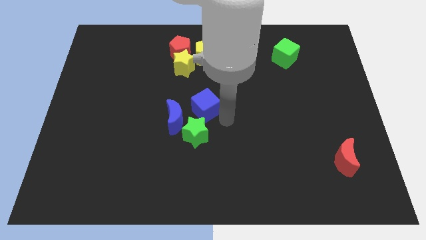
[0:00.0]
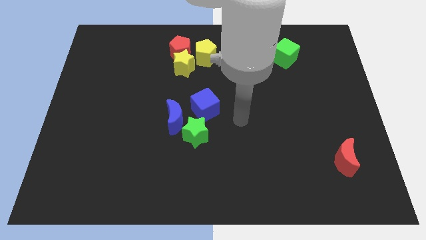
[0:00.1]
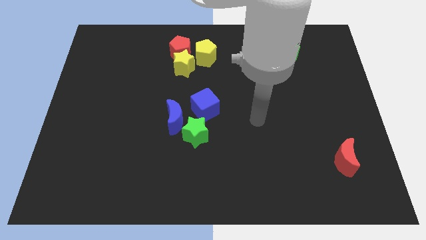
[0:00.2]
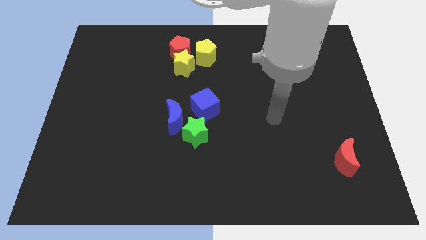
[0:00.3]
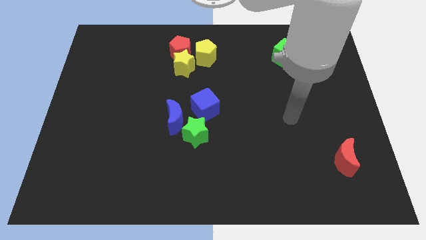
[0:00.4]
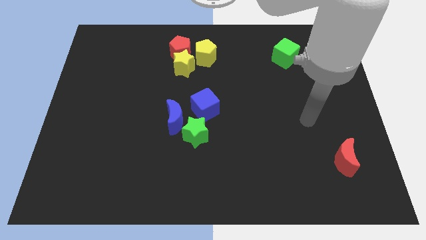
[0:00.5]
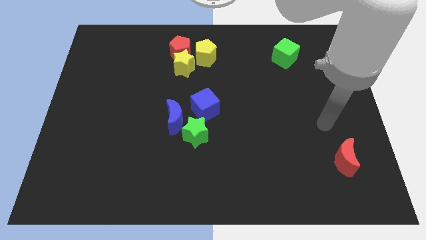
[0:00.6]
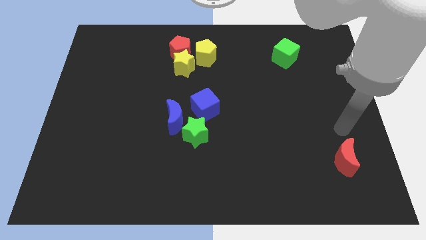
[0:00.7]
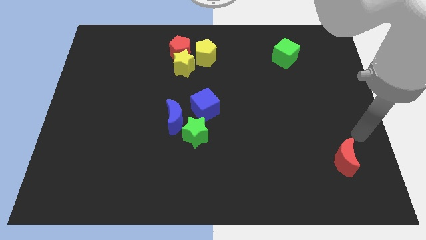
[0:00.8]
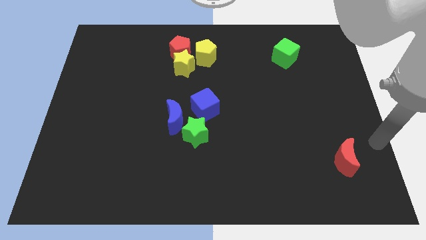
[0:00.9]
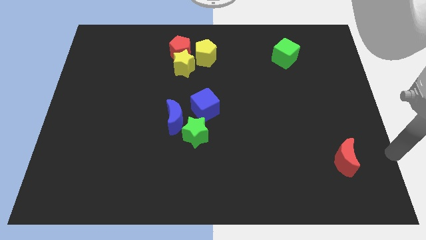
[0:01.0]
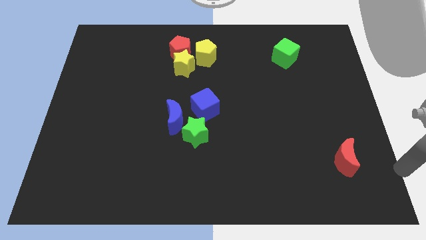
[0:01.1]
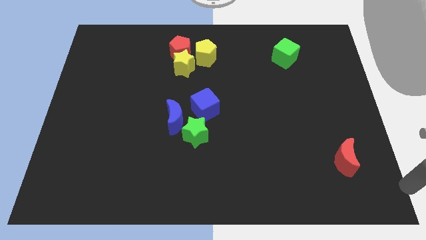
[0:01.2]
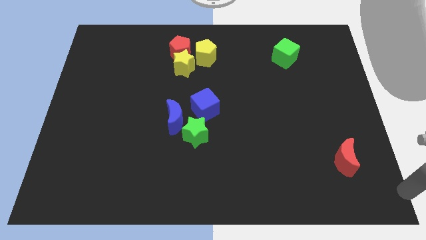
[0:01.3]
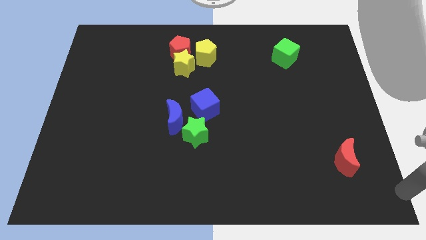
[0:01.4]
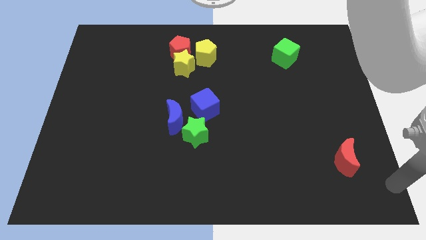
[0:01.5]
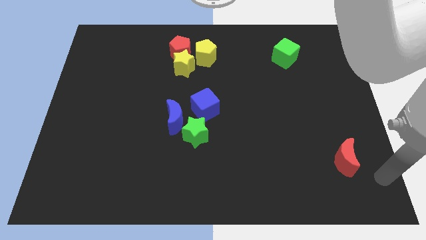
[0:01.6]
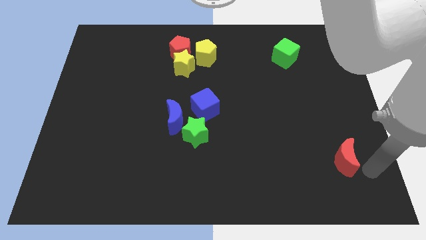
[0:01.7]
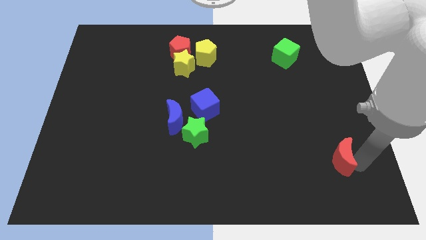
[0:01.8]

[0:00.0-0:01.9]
move the hand to the right side of the red moon

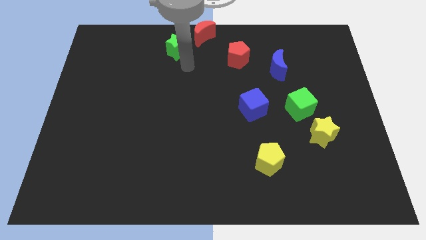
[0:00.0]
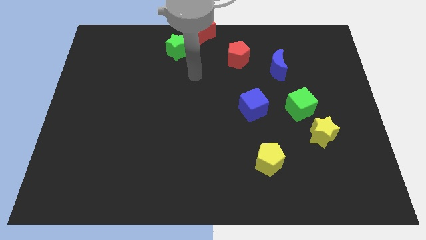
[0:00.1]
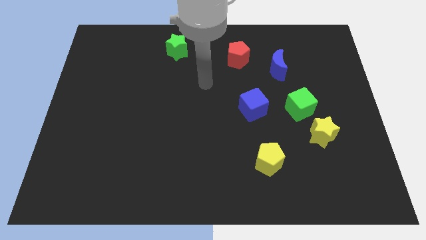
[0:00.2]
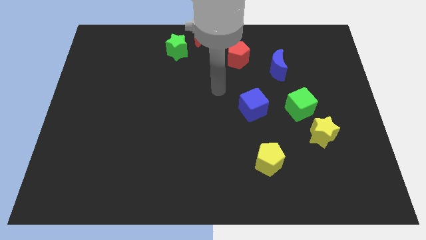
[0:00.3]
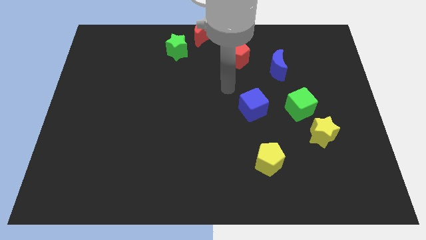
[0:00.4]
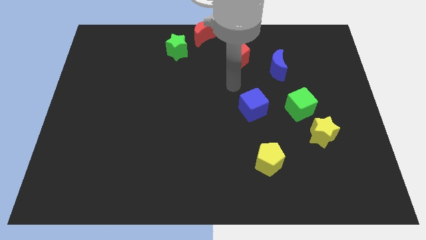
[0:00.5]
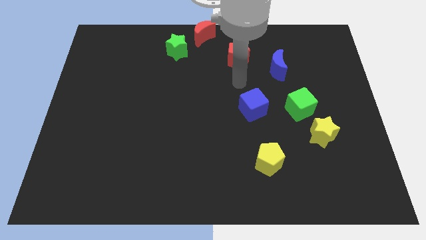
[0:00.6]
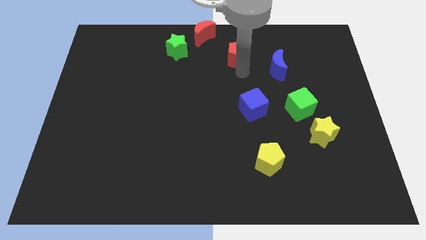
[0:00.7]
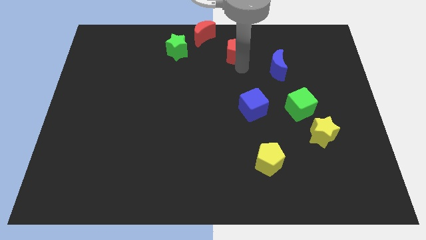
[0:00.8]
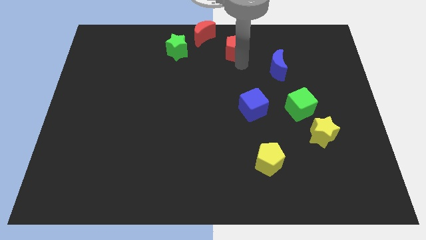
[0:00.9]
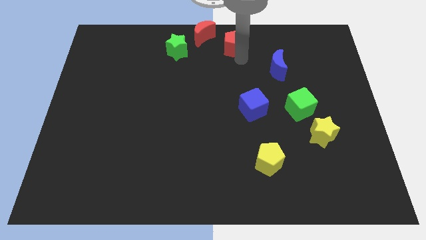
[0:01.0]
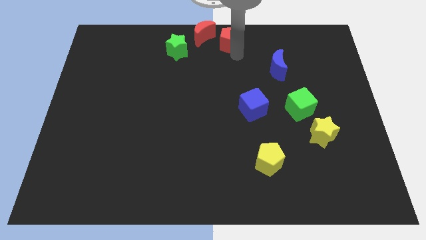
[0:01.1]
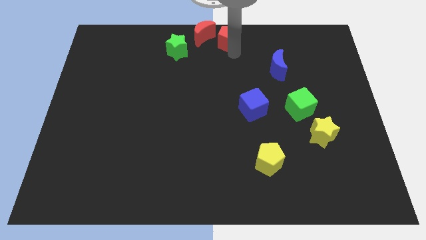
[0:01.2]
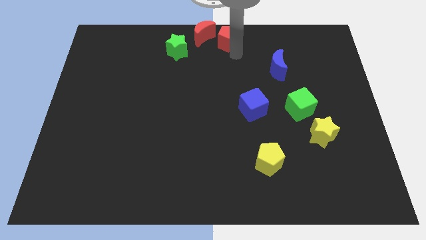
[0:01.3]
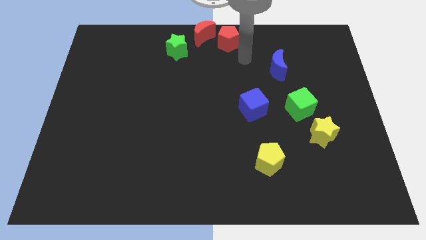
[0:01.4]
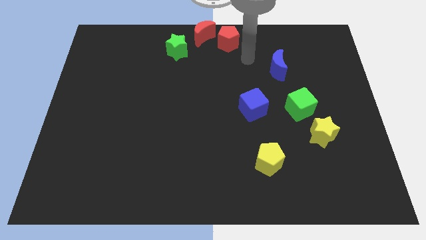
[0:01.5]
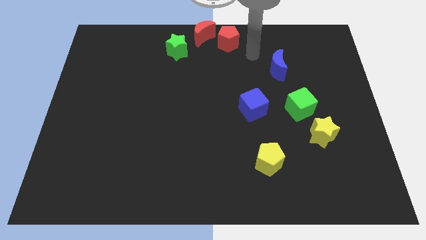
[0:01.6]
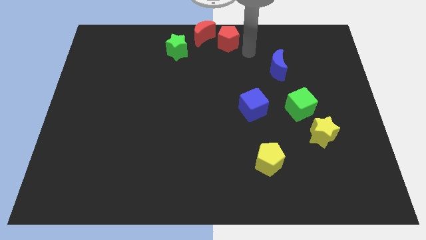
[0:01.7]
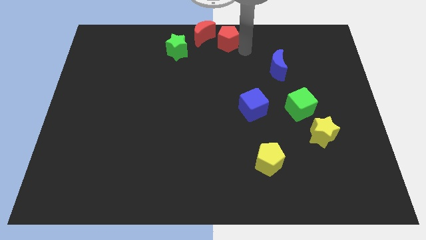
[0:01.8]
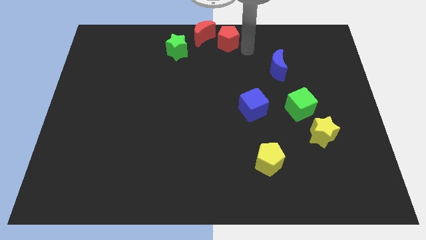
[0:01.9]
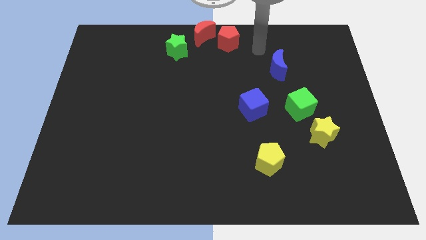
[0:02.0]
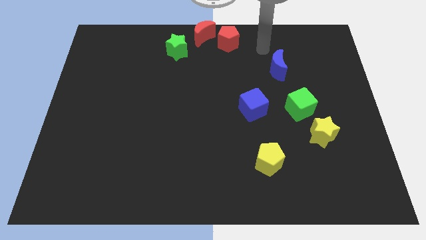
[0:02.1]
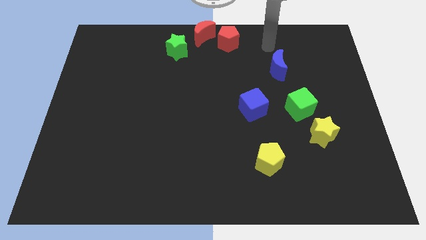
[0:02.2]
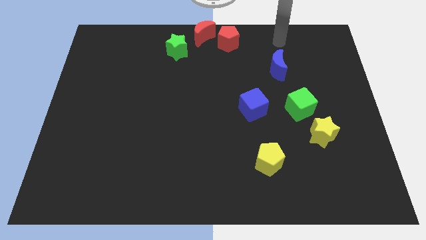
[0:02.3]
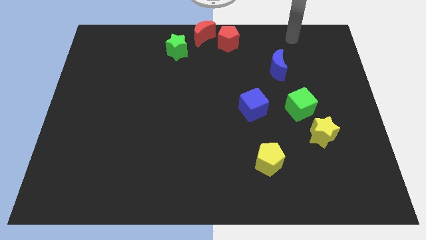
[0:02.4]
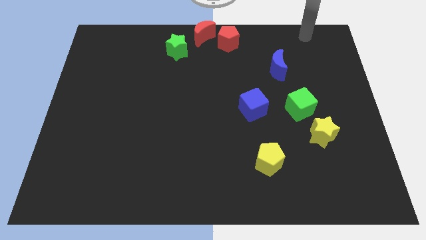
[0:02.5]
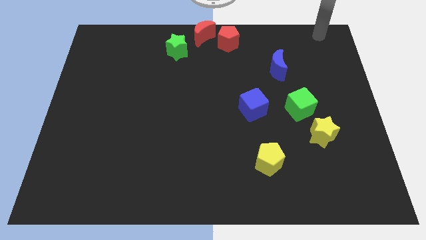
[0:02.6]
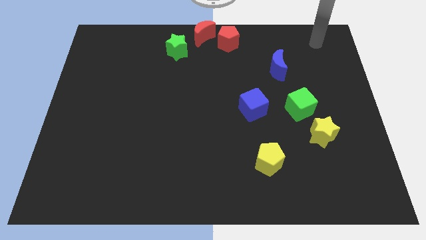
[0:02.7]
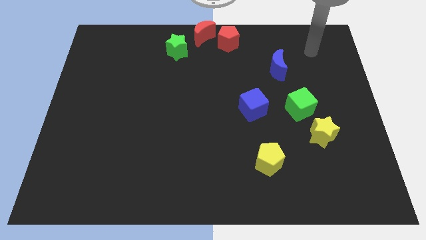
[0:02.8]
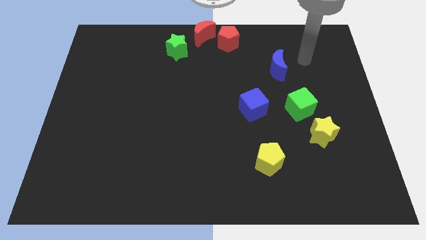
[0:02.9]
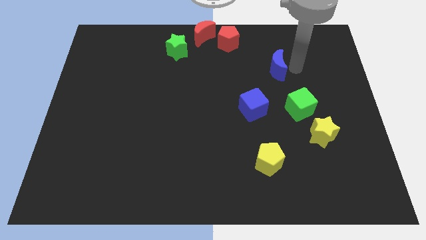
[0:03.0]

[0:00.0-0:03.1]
move the red pentagon to the right of the red moon

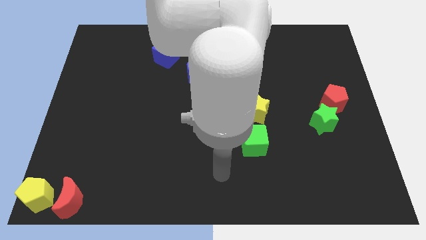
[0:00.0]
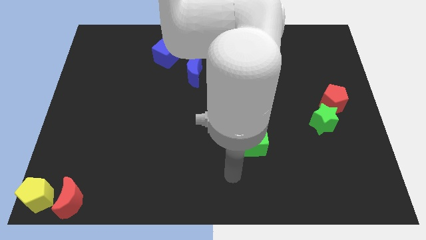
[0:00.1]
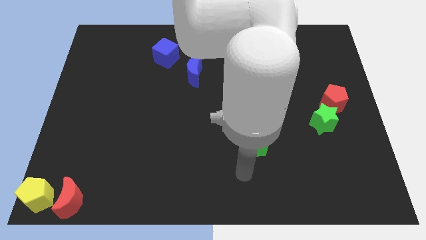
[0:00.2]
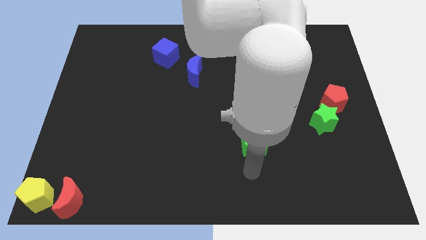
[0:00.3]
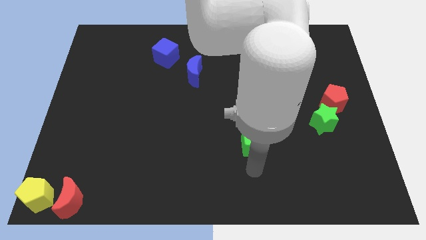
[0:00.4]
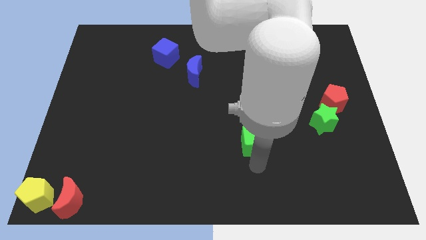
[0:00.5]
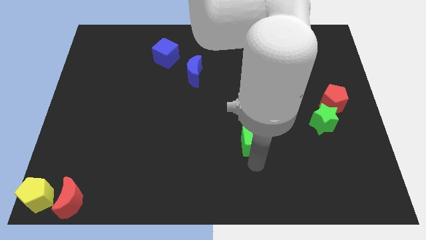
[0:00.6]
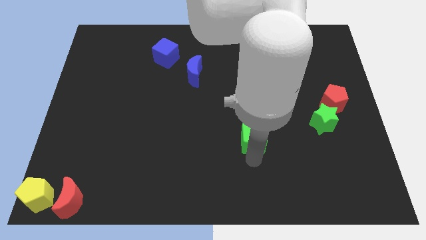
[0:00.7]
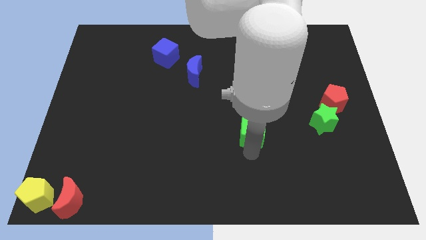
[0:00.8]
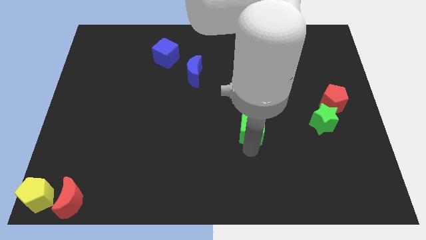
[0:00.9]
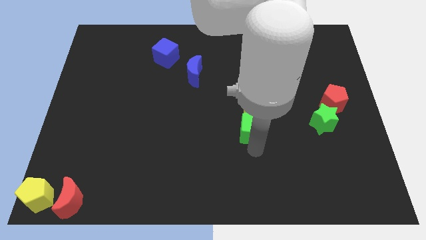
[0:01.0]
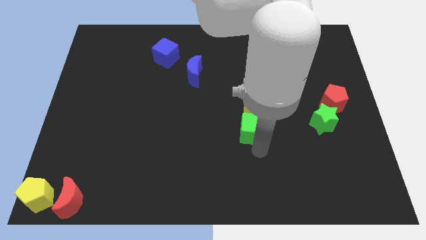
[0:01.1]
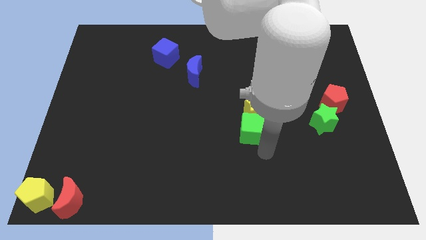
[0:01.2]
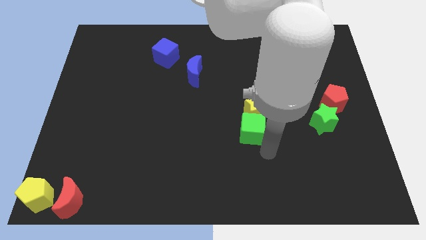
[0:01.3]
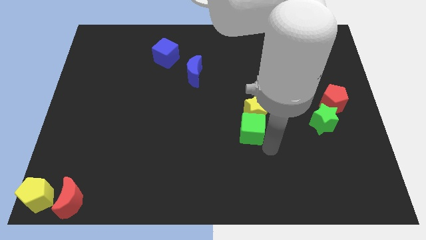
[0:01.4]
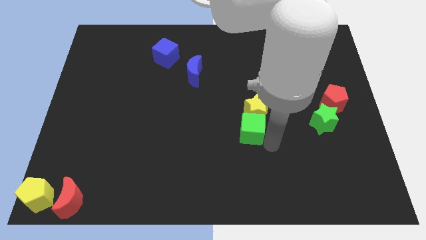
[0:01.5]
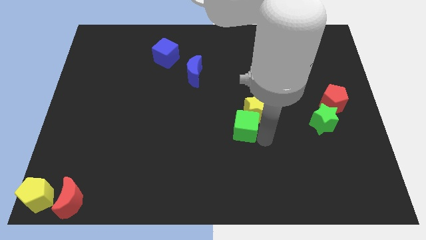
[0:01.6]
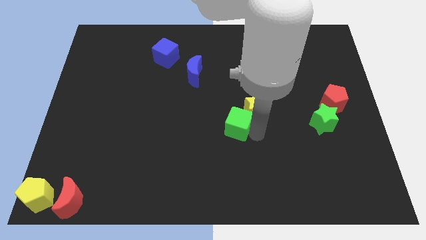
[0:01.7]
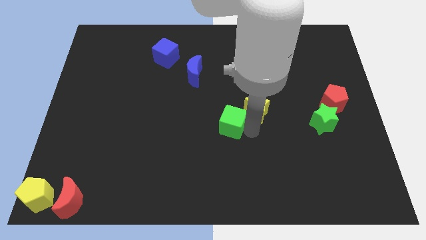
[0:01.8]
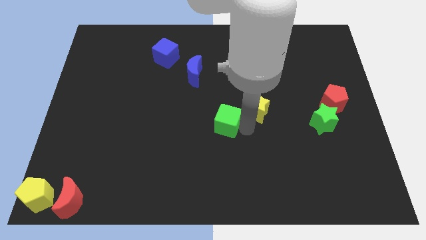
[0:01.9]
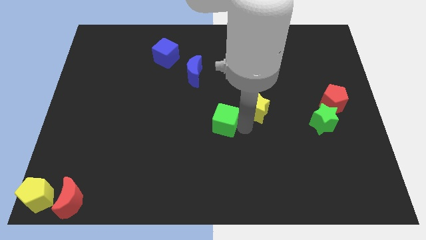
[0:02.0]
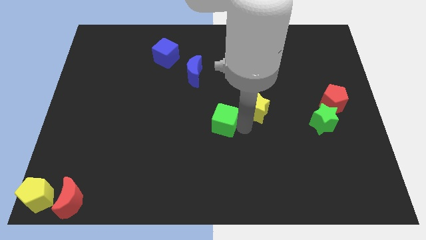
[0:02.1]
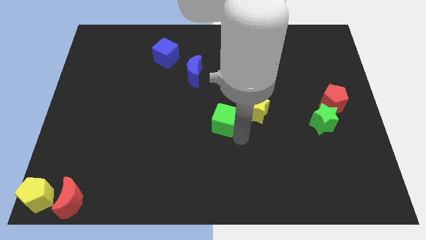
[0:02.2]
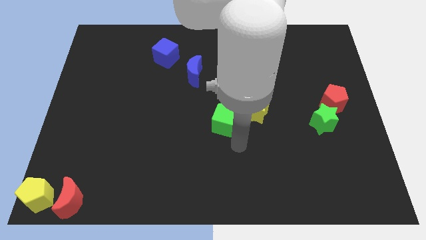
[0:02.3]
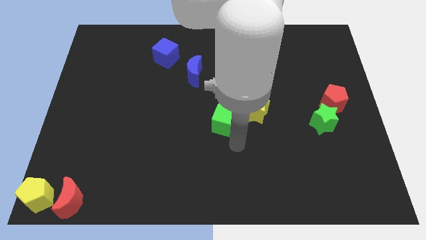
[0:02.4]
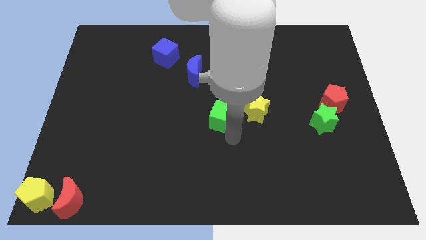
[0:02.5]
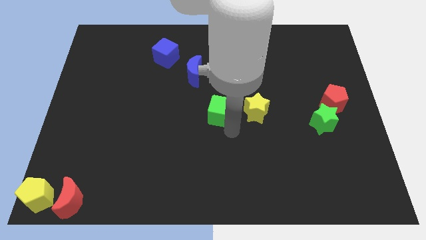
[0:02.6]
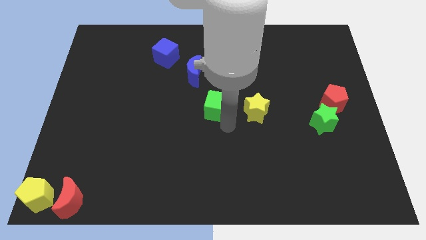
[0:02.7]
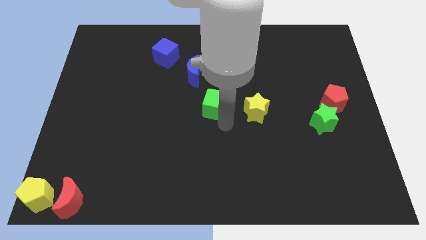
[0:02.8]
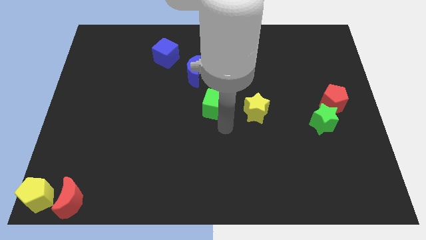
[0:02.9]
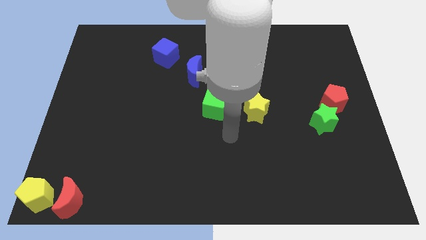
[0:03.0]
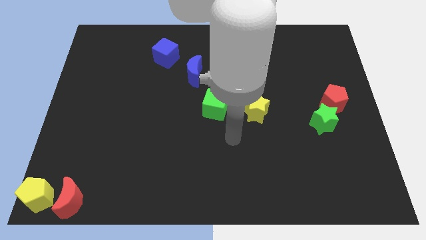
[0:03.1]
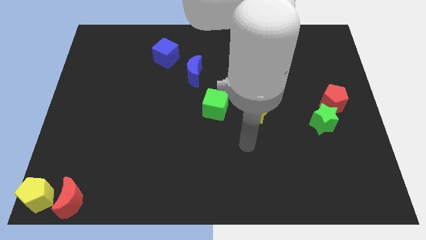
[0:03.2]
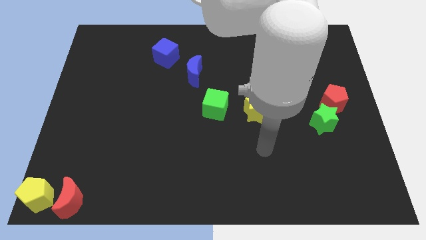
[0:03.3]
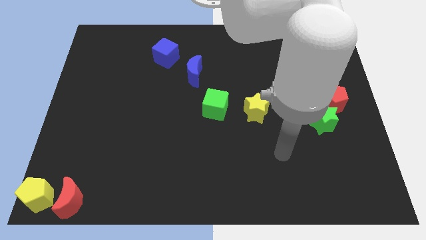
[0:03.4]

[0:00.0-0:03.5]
place the green cube left to the yellow star

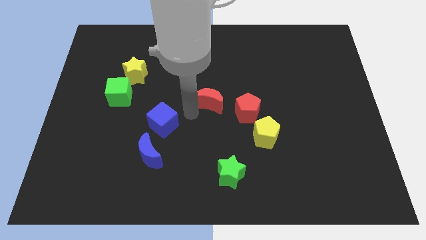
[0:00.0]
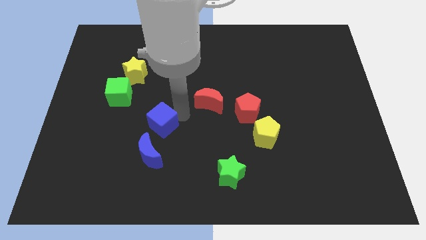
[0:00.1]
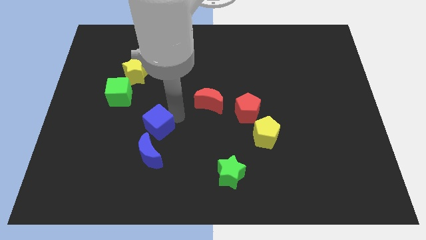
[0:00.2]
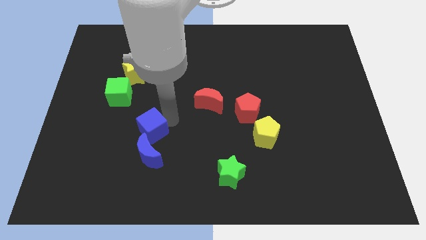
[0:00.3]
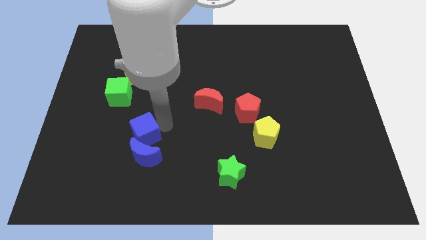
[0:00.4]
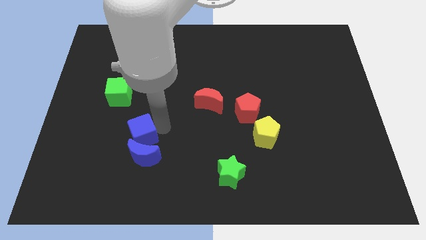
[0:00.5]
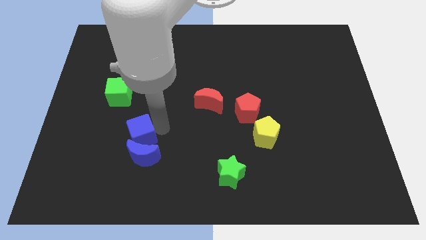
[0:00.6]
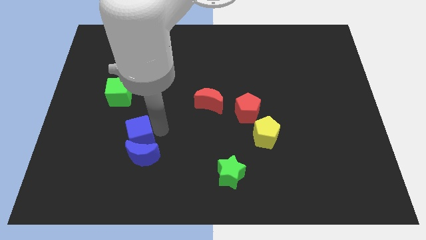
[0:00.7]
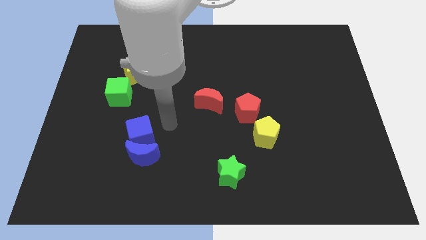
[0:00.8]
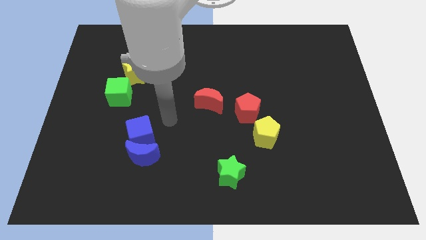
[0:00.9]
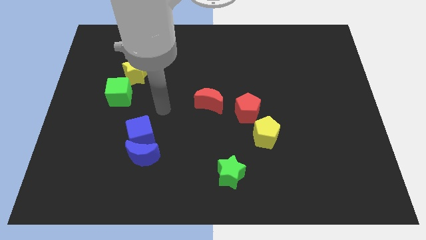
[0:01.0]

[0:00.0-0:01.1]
place the blue cube above the blue crescent
